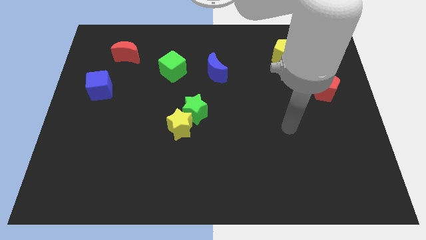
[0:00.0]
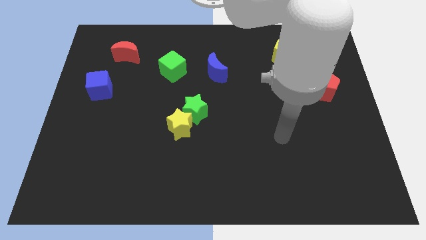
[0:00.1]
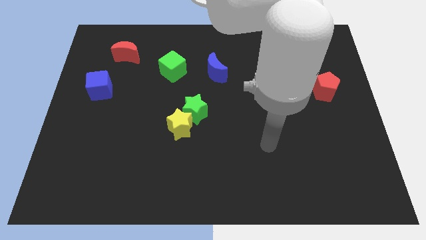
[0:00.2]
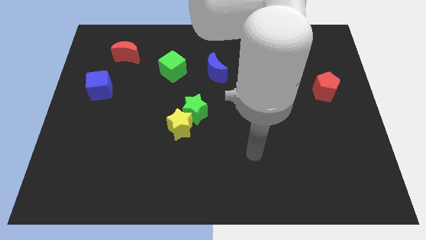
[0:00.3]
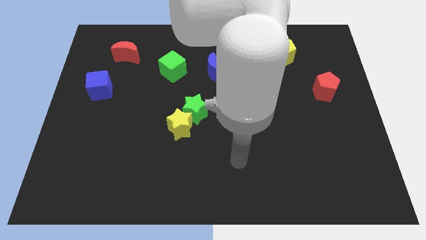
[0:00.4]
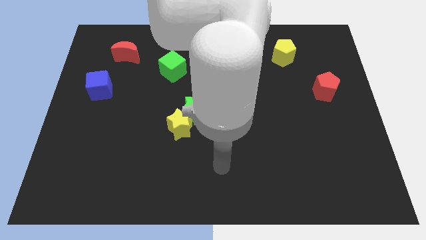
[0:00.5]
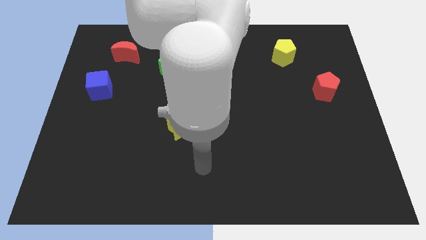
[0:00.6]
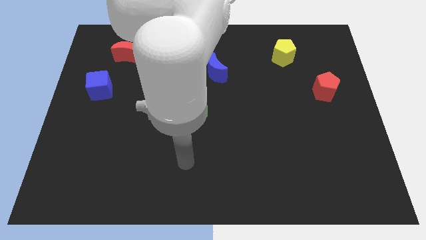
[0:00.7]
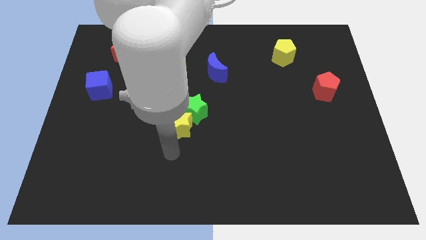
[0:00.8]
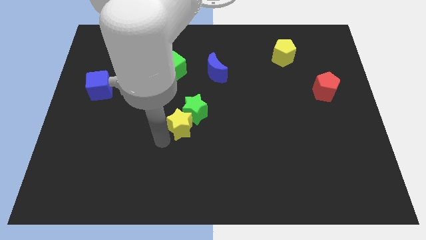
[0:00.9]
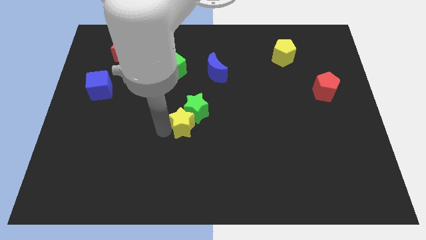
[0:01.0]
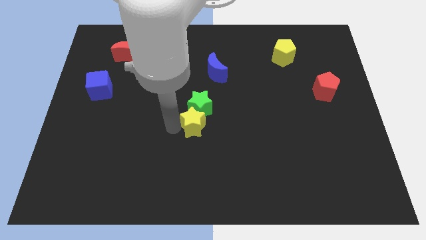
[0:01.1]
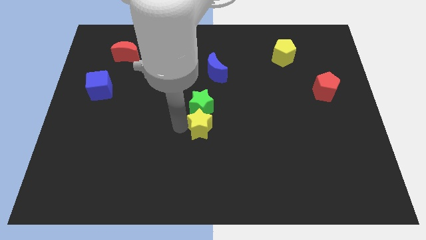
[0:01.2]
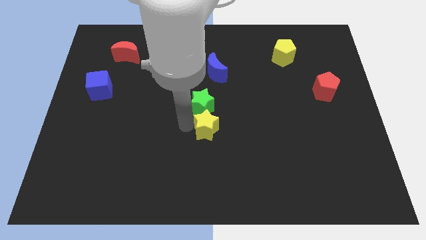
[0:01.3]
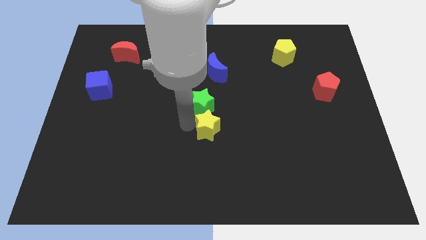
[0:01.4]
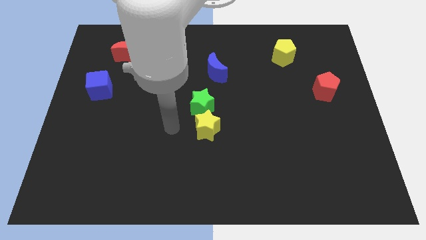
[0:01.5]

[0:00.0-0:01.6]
push the yellow star to the bottom of the green star

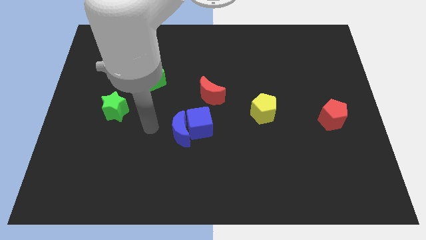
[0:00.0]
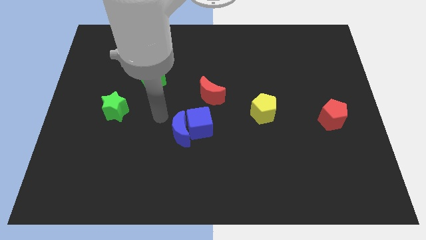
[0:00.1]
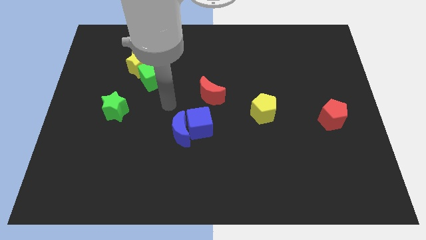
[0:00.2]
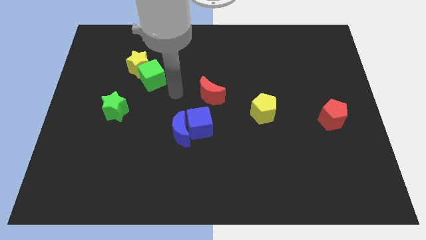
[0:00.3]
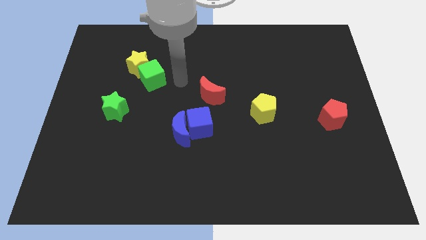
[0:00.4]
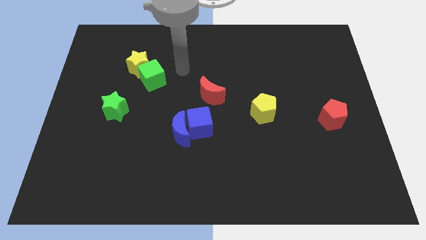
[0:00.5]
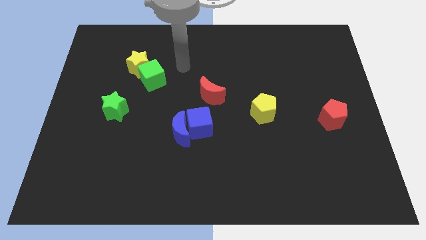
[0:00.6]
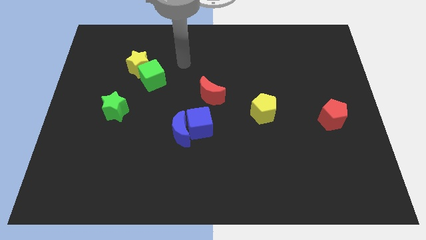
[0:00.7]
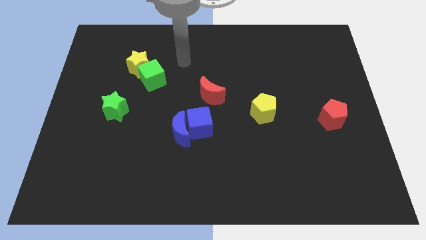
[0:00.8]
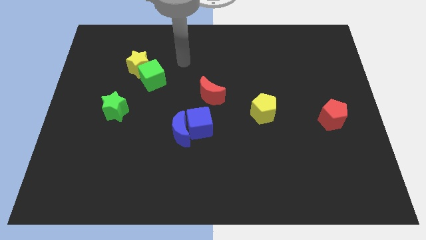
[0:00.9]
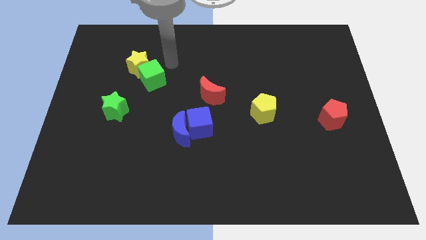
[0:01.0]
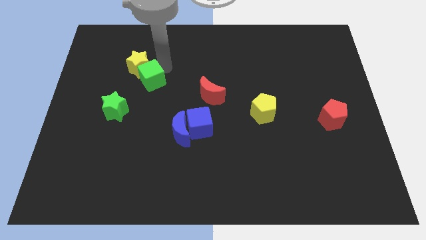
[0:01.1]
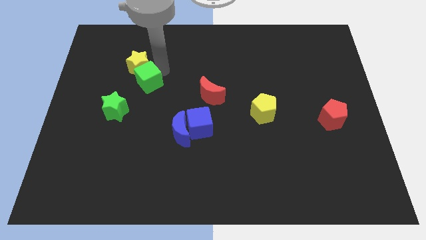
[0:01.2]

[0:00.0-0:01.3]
go and touch the top right of the green cube

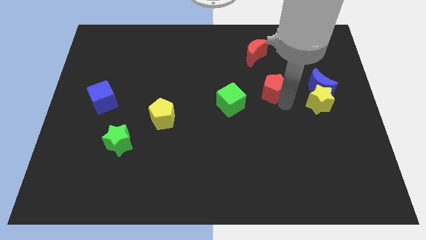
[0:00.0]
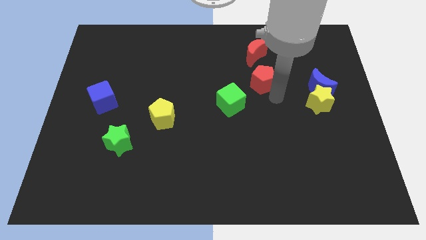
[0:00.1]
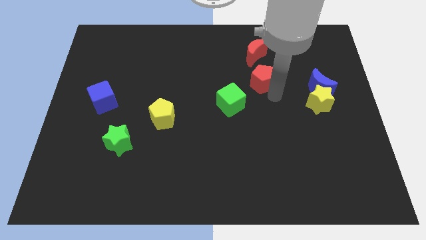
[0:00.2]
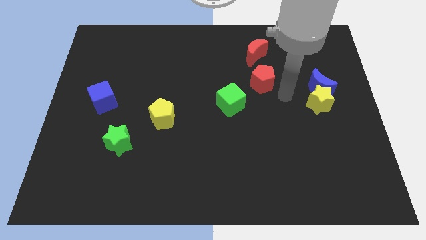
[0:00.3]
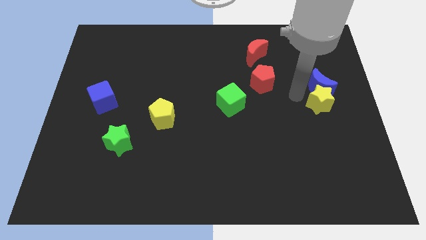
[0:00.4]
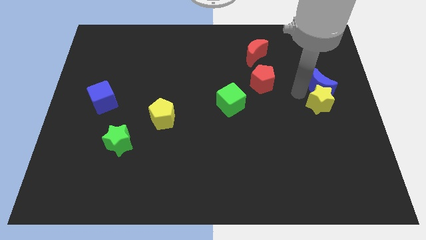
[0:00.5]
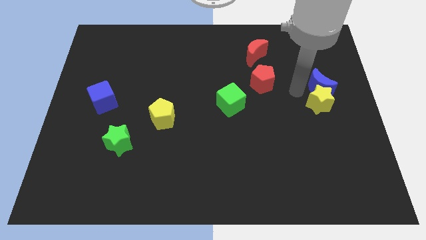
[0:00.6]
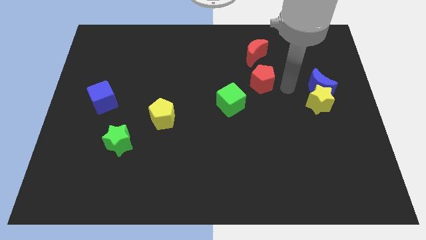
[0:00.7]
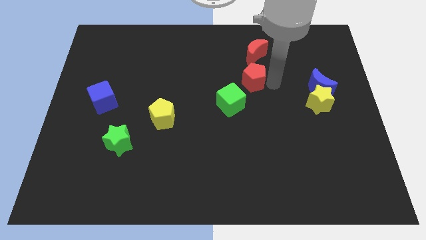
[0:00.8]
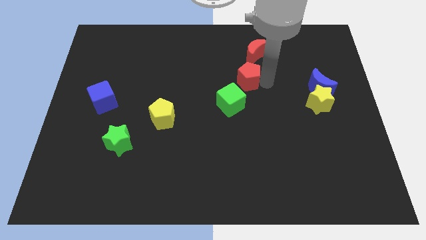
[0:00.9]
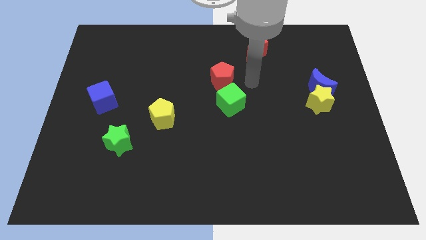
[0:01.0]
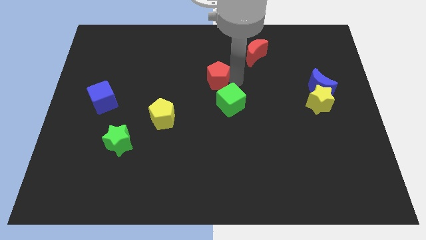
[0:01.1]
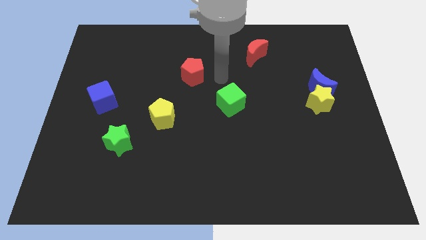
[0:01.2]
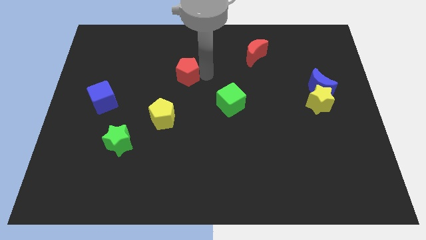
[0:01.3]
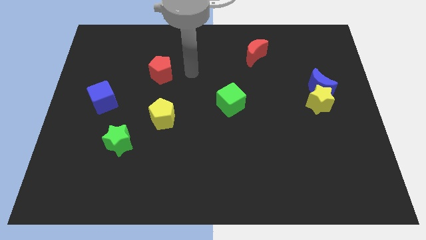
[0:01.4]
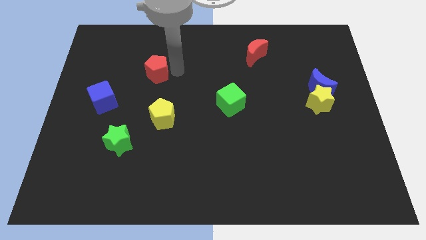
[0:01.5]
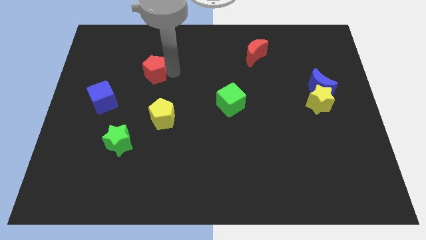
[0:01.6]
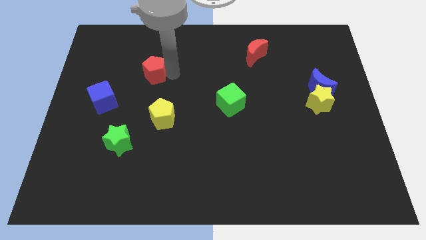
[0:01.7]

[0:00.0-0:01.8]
push the red pentagon to the left

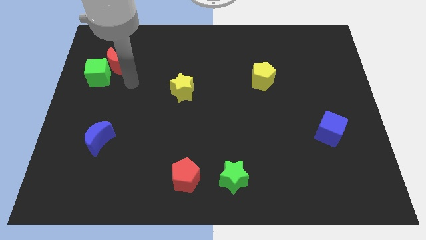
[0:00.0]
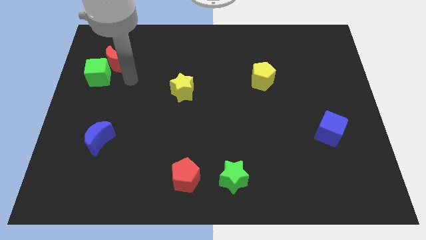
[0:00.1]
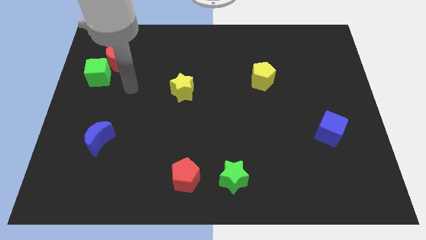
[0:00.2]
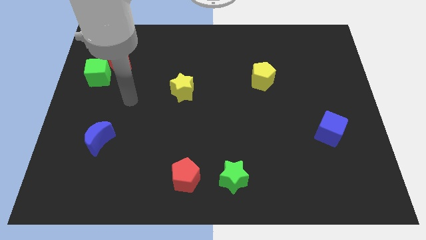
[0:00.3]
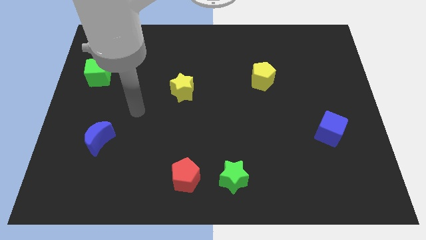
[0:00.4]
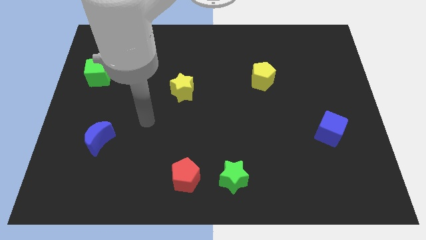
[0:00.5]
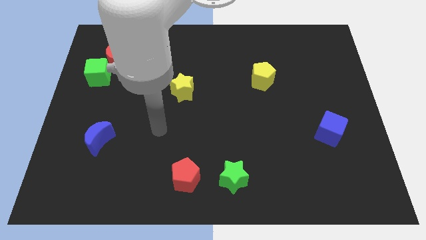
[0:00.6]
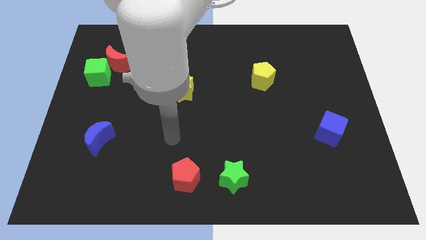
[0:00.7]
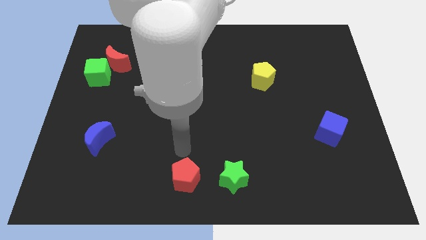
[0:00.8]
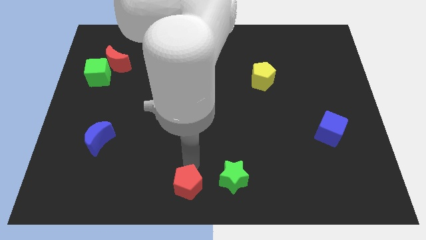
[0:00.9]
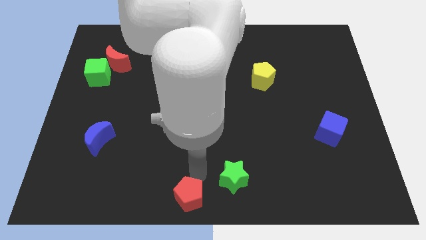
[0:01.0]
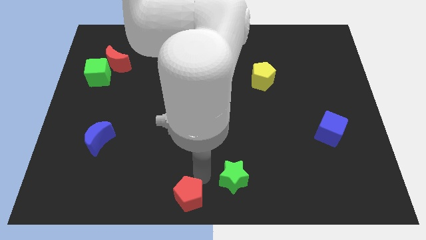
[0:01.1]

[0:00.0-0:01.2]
push red pentagon slightly towards down

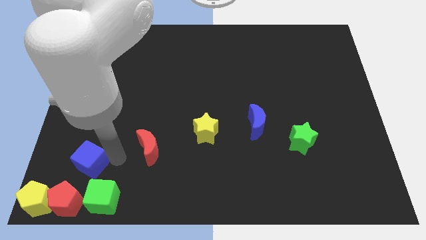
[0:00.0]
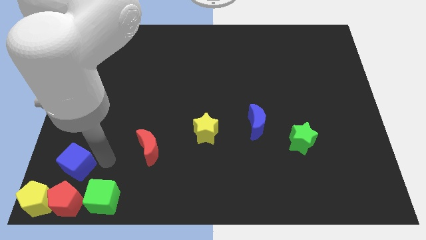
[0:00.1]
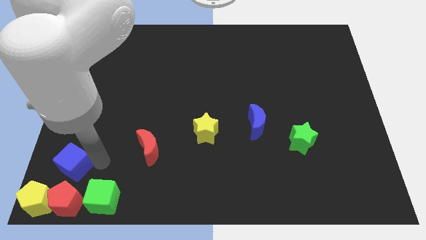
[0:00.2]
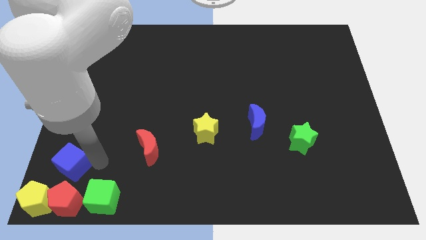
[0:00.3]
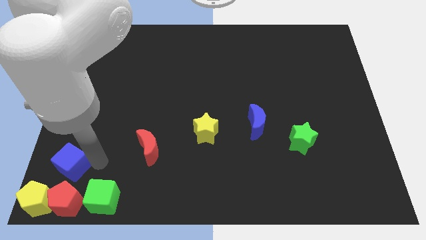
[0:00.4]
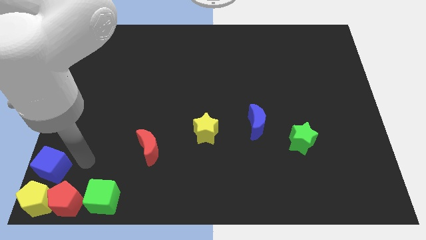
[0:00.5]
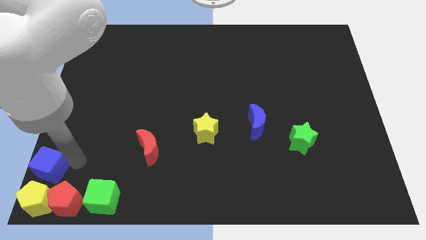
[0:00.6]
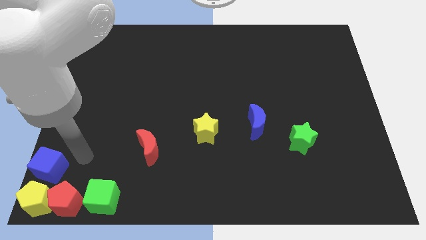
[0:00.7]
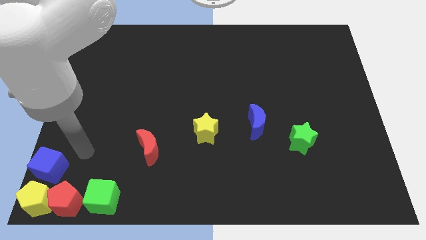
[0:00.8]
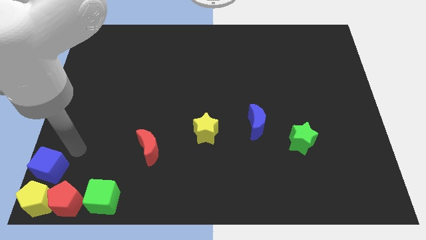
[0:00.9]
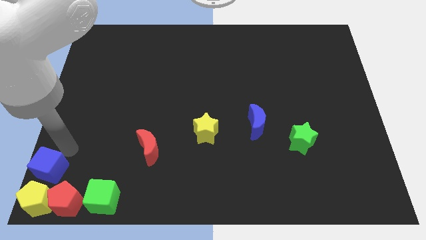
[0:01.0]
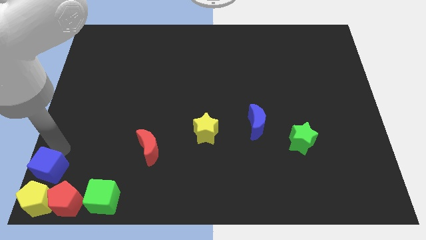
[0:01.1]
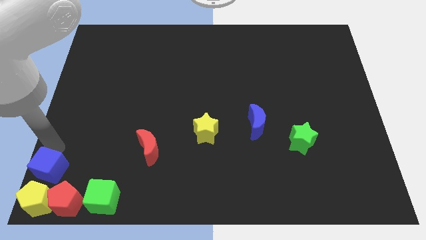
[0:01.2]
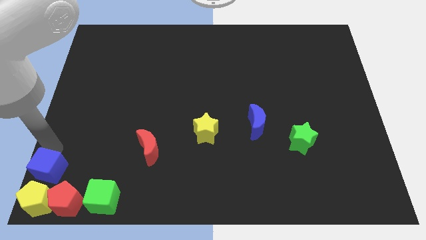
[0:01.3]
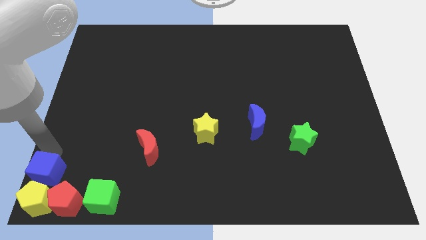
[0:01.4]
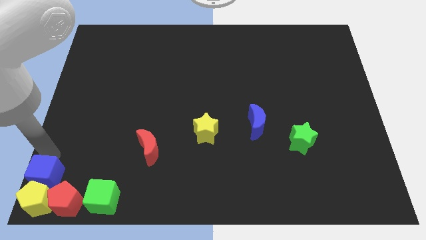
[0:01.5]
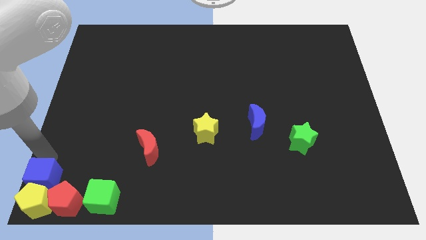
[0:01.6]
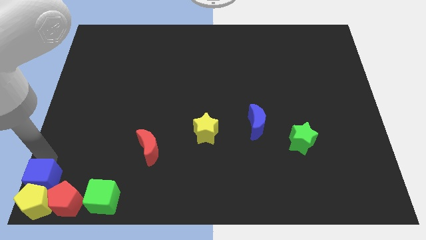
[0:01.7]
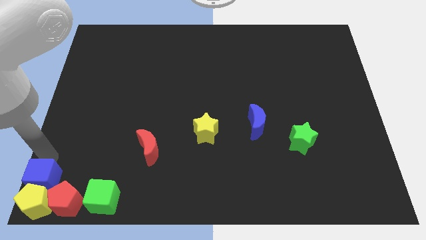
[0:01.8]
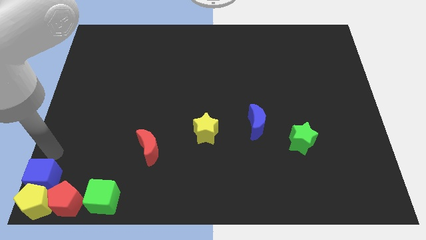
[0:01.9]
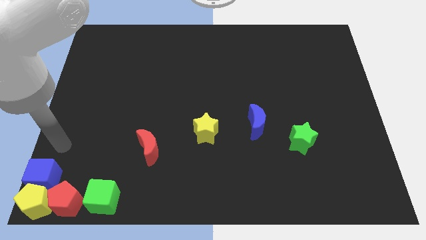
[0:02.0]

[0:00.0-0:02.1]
place the blue cube above yellow pentagon

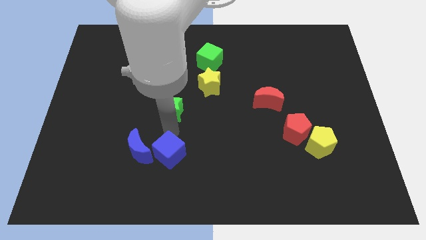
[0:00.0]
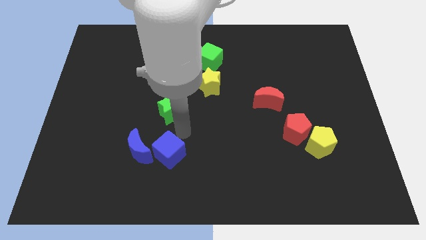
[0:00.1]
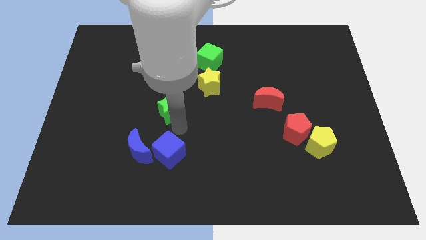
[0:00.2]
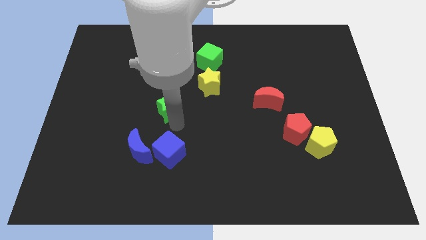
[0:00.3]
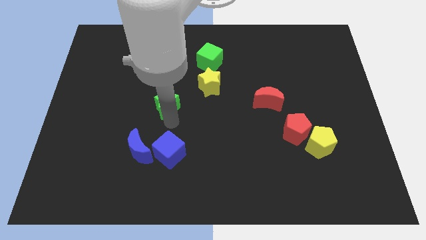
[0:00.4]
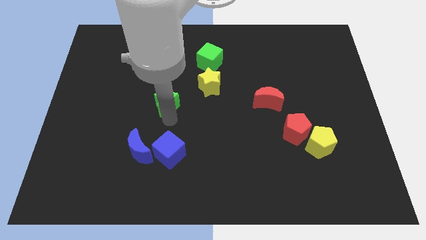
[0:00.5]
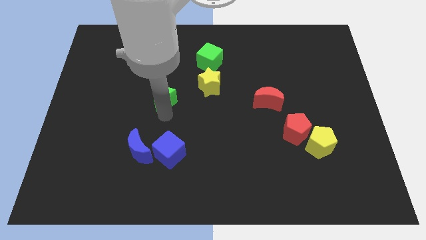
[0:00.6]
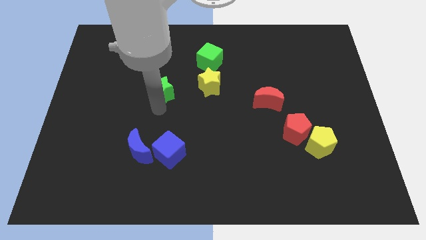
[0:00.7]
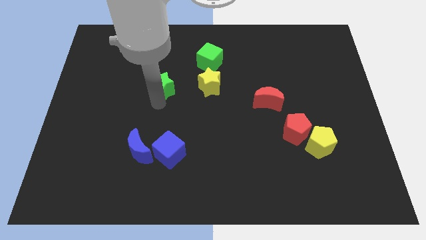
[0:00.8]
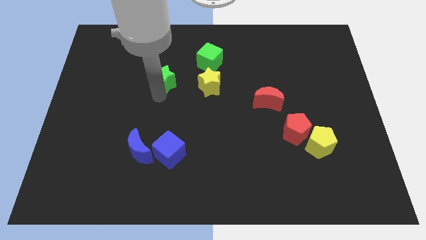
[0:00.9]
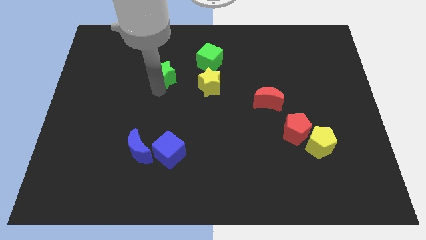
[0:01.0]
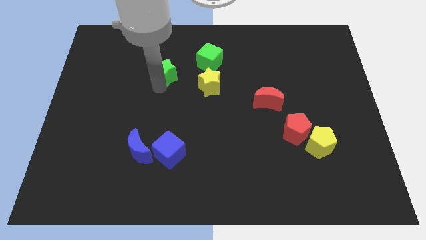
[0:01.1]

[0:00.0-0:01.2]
place green star to the left of yellow star
